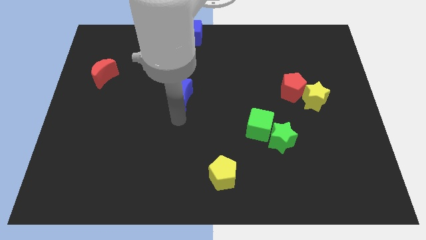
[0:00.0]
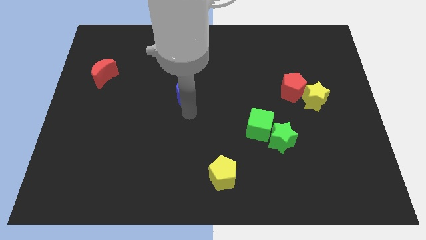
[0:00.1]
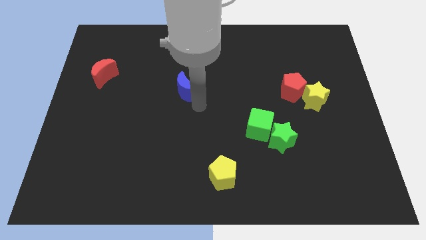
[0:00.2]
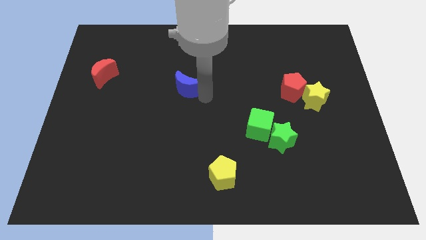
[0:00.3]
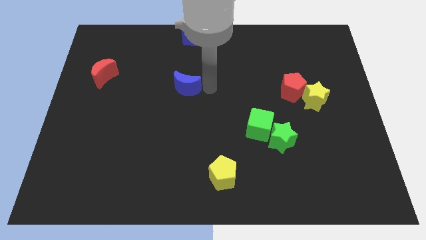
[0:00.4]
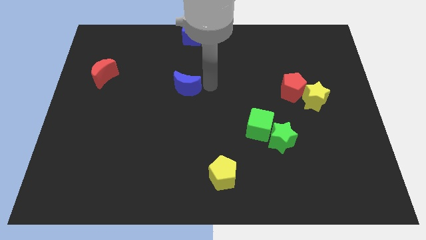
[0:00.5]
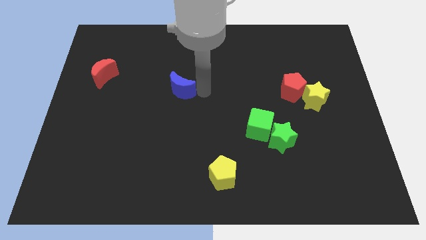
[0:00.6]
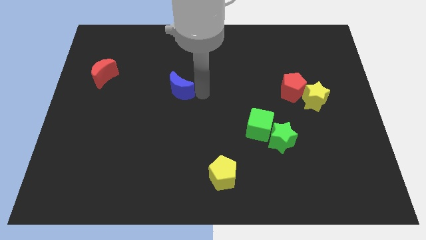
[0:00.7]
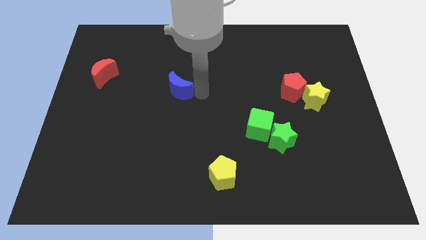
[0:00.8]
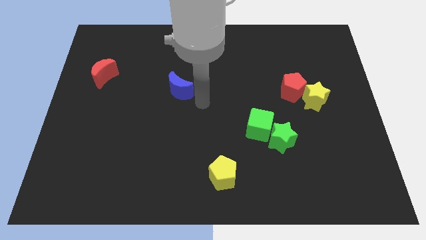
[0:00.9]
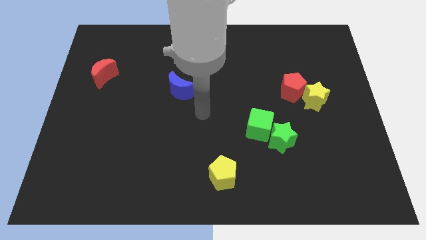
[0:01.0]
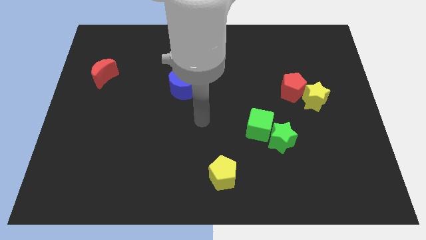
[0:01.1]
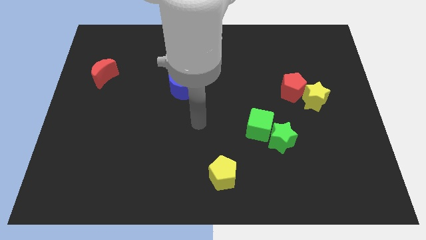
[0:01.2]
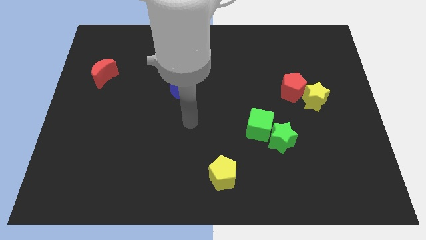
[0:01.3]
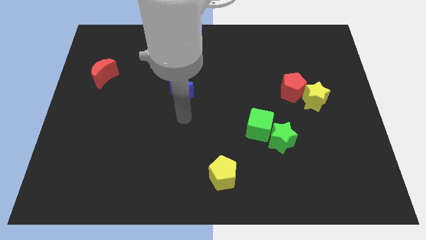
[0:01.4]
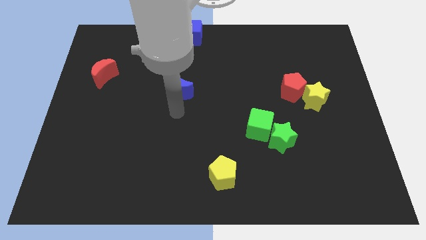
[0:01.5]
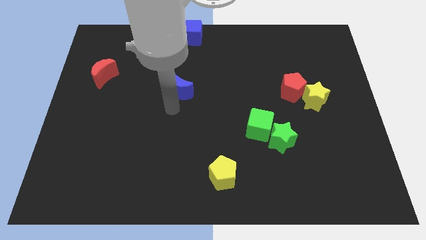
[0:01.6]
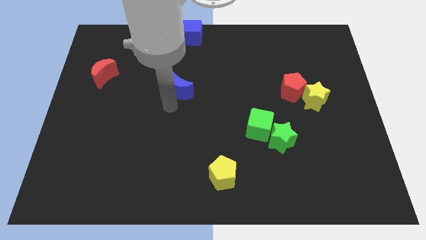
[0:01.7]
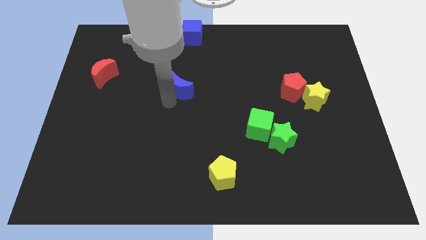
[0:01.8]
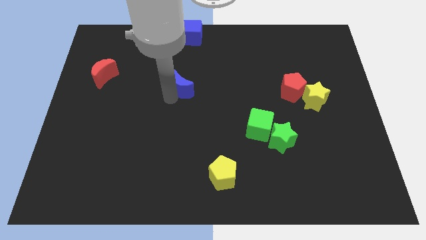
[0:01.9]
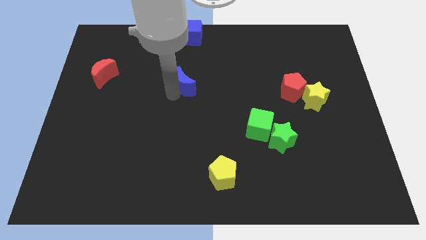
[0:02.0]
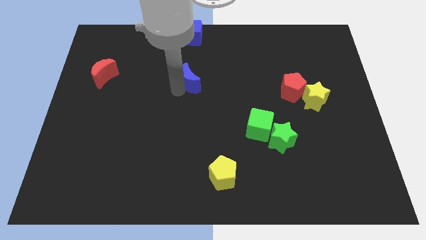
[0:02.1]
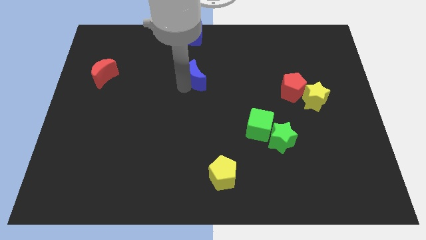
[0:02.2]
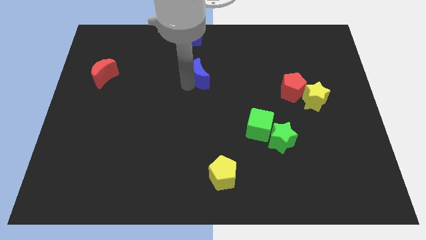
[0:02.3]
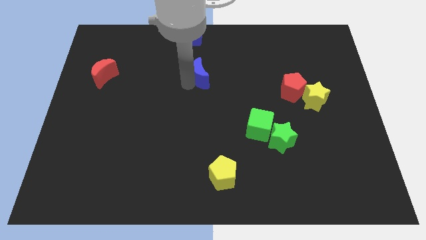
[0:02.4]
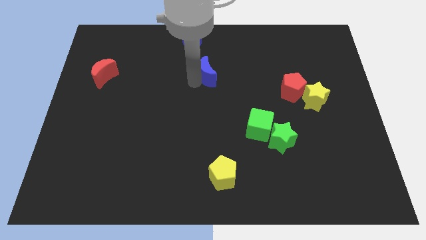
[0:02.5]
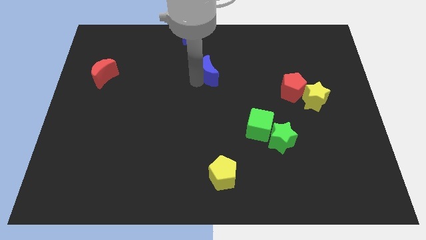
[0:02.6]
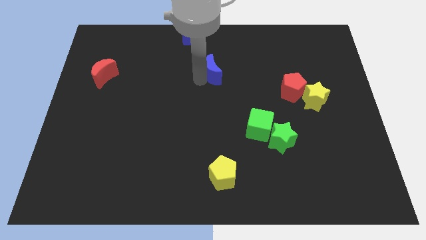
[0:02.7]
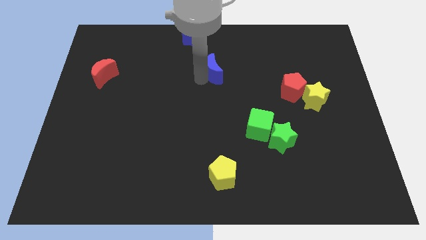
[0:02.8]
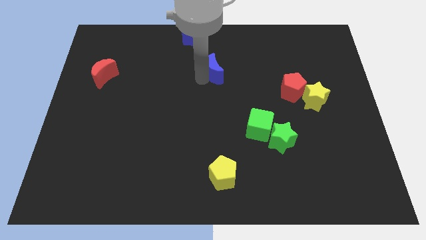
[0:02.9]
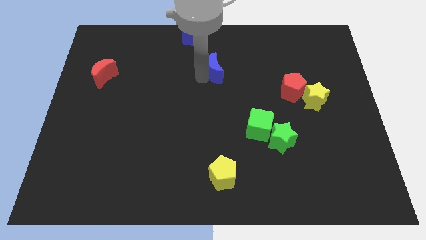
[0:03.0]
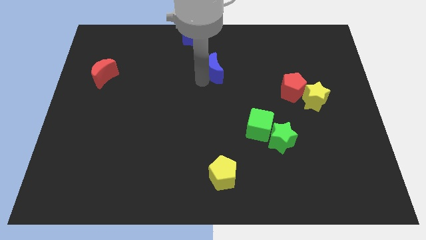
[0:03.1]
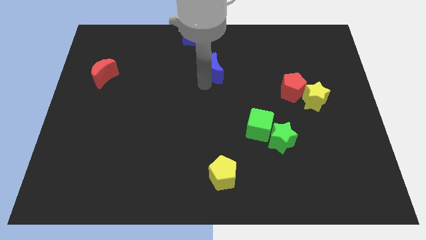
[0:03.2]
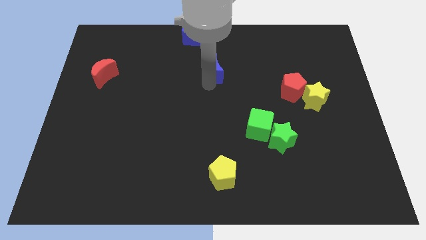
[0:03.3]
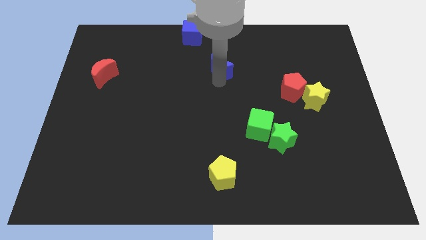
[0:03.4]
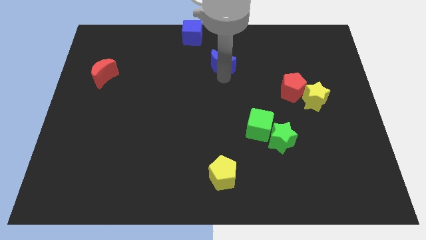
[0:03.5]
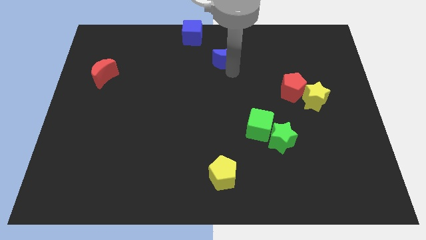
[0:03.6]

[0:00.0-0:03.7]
place the blue crescent diagonally on the bottom right side of the blue cube

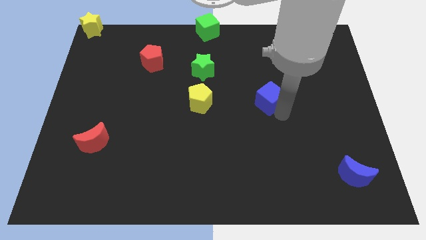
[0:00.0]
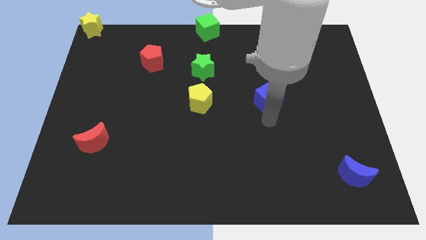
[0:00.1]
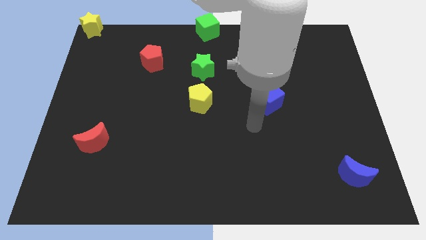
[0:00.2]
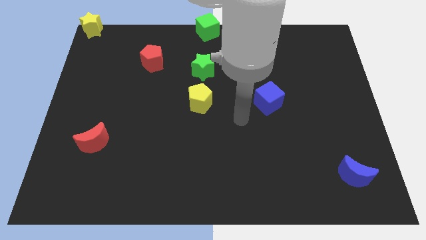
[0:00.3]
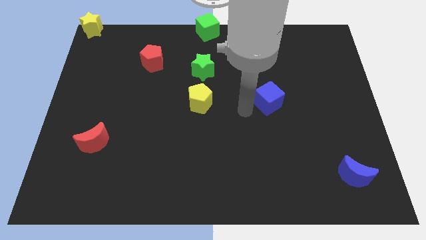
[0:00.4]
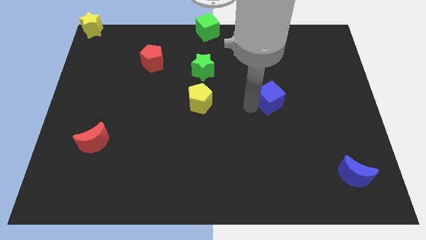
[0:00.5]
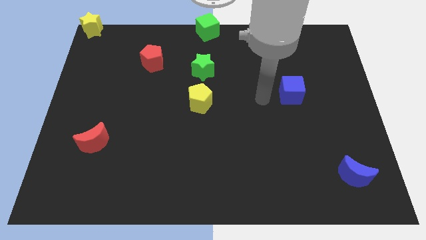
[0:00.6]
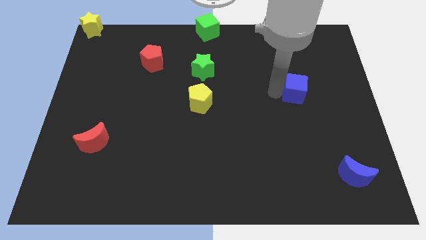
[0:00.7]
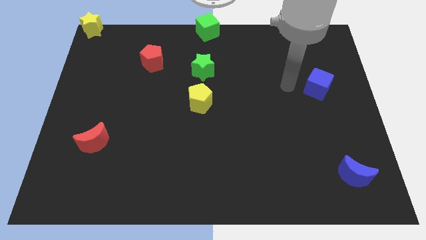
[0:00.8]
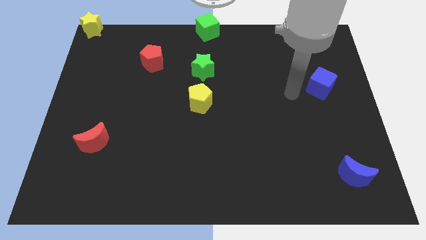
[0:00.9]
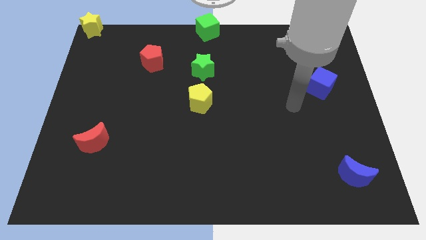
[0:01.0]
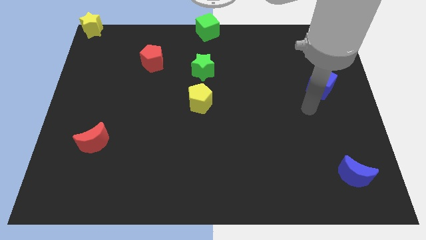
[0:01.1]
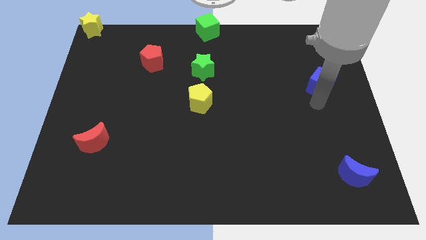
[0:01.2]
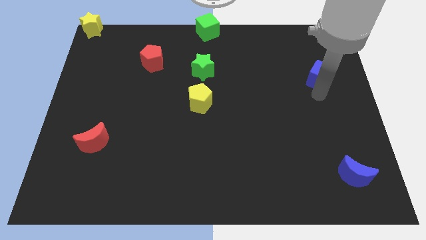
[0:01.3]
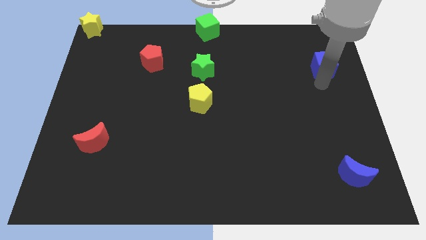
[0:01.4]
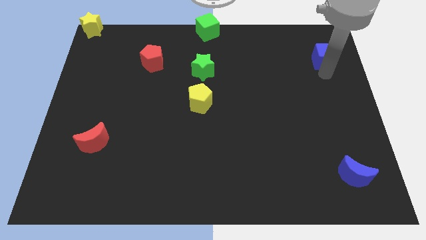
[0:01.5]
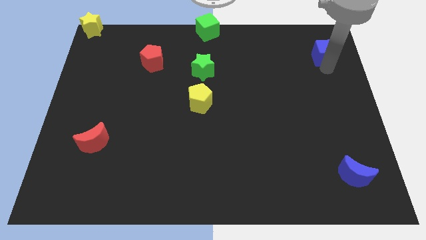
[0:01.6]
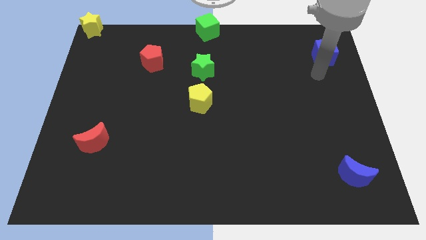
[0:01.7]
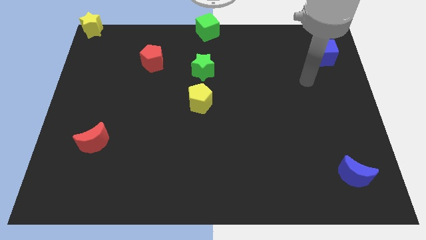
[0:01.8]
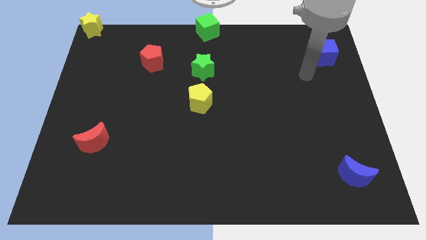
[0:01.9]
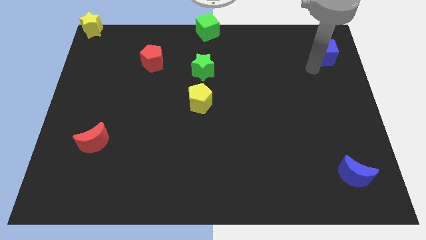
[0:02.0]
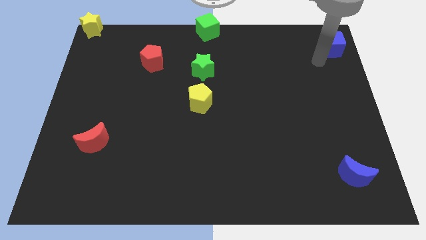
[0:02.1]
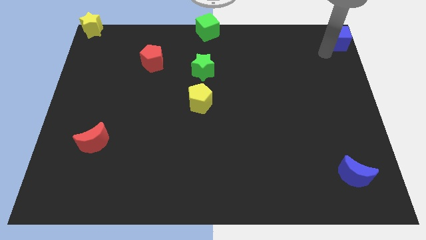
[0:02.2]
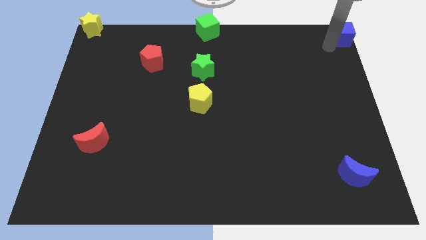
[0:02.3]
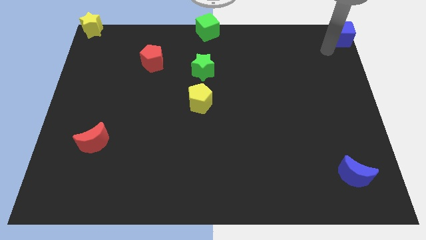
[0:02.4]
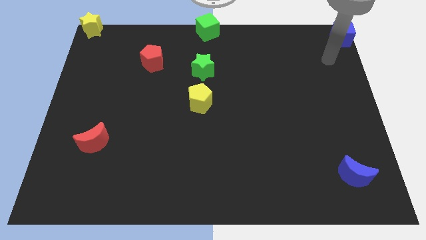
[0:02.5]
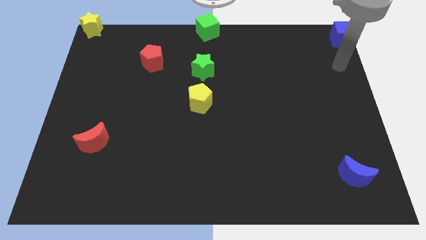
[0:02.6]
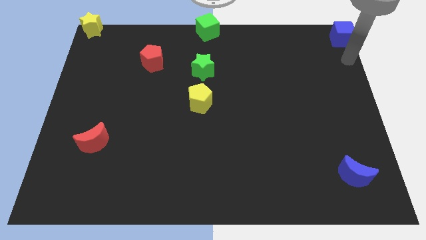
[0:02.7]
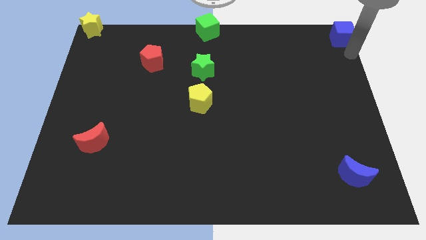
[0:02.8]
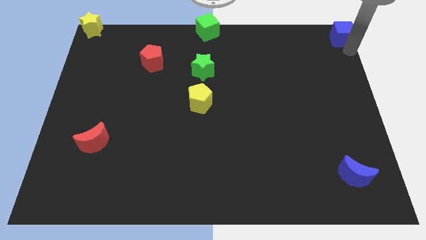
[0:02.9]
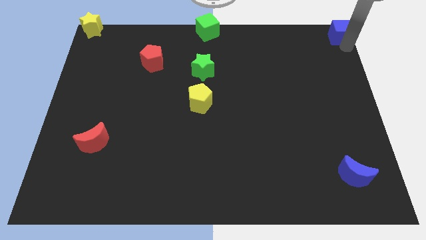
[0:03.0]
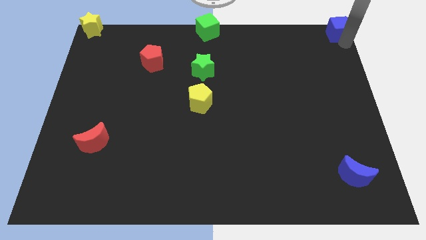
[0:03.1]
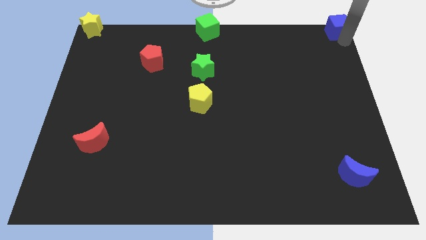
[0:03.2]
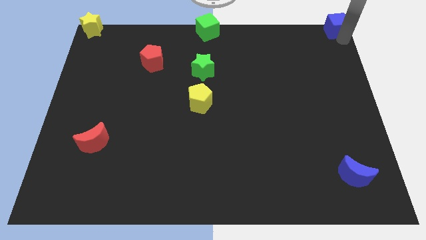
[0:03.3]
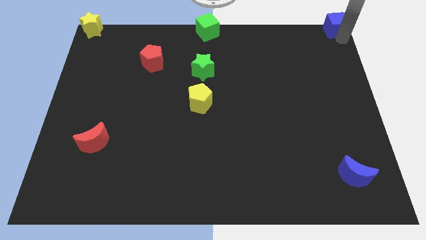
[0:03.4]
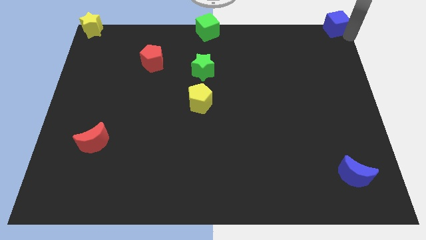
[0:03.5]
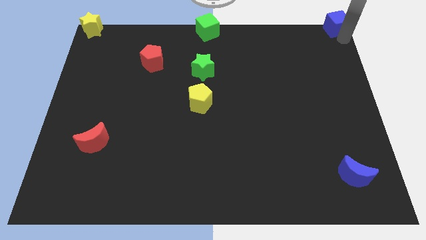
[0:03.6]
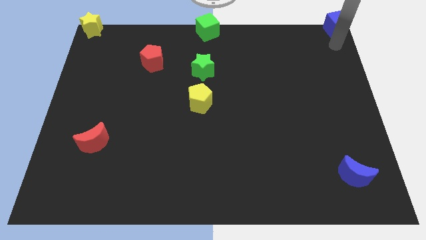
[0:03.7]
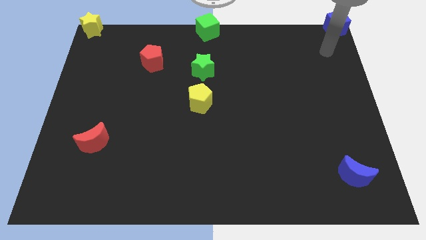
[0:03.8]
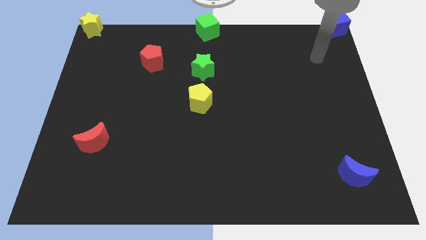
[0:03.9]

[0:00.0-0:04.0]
push the blue cube to the top right corner

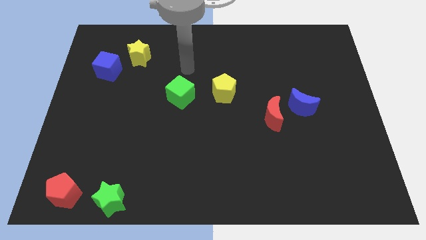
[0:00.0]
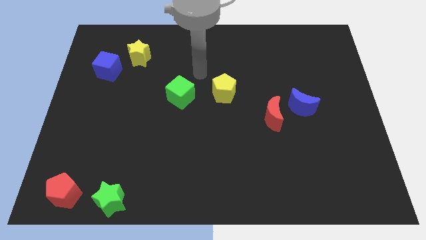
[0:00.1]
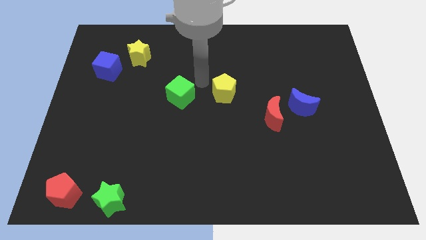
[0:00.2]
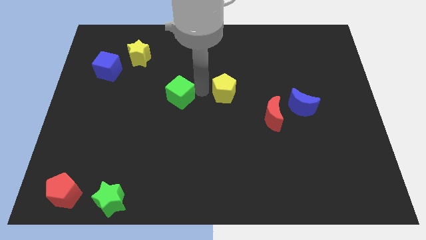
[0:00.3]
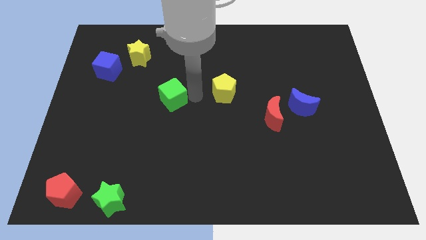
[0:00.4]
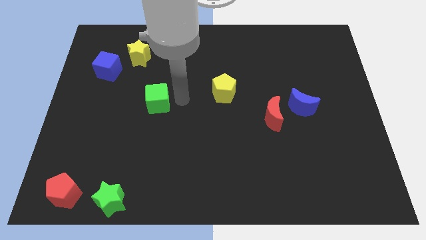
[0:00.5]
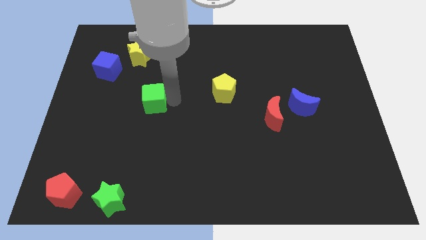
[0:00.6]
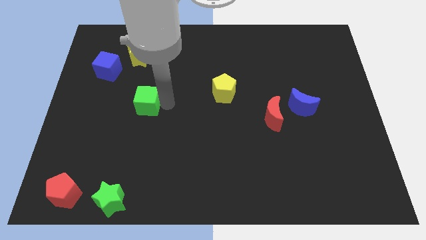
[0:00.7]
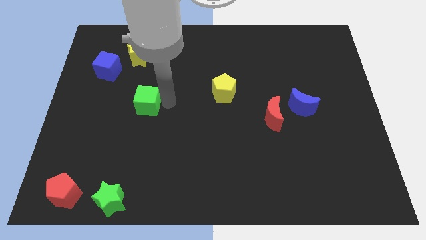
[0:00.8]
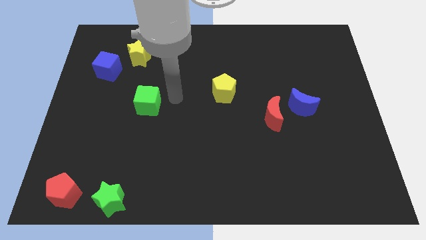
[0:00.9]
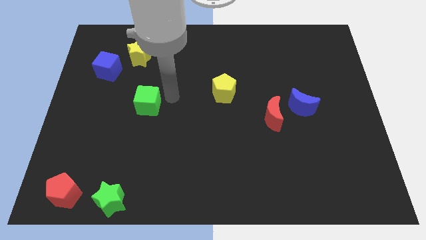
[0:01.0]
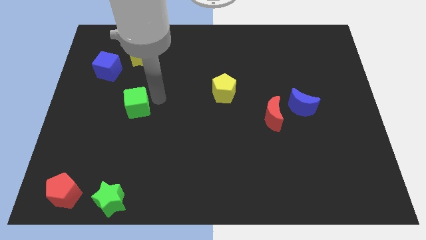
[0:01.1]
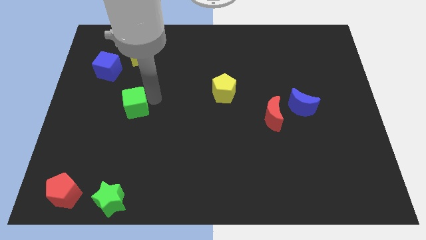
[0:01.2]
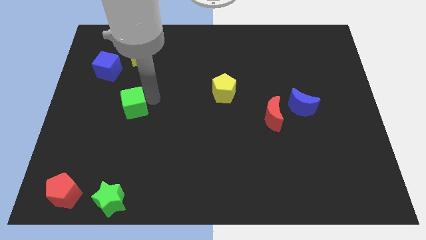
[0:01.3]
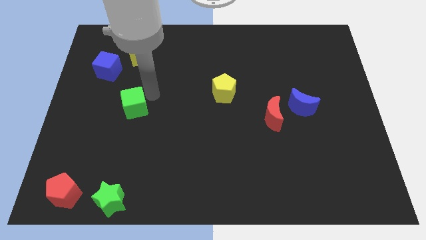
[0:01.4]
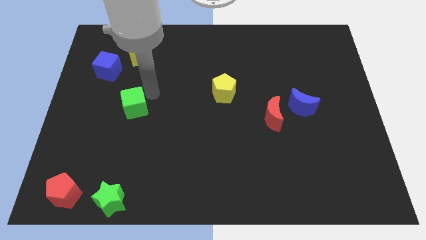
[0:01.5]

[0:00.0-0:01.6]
push the green cube vertically at the top side of the green star
